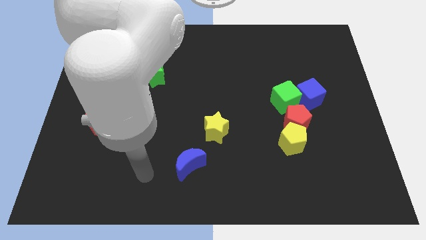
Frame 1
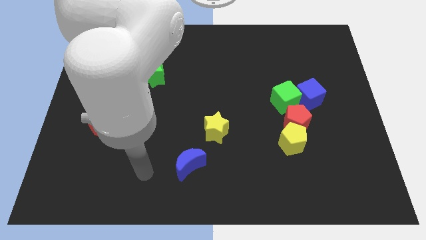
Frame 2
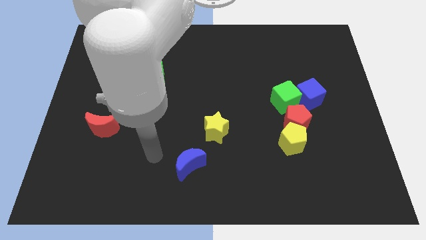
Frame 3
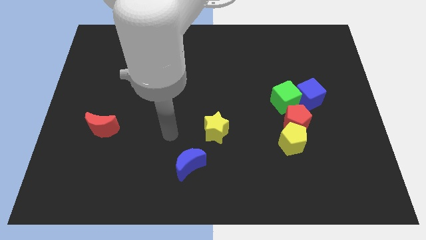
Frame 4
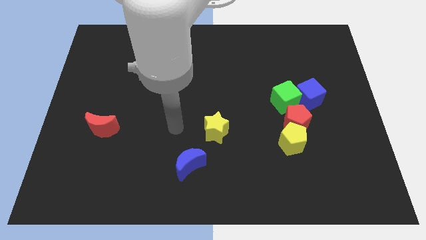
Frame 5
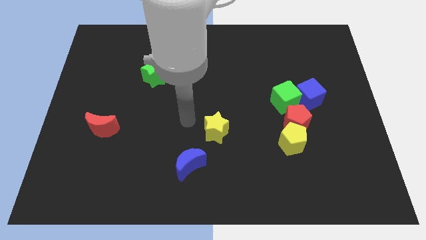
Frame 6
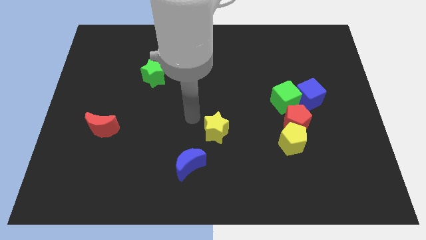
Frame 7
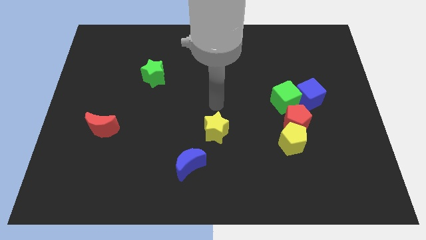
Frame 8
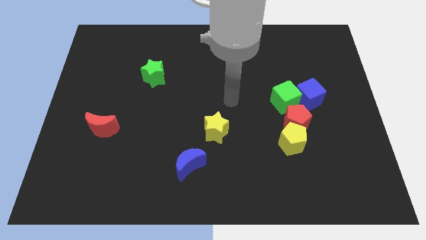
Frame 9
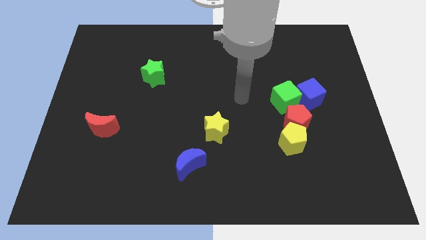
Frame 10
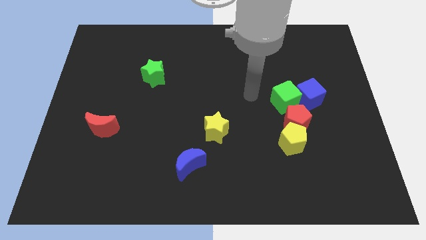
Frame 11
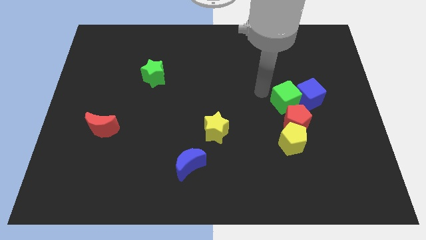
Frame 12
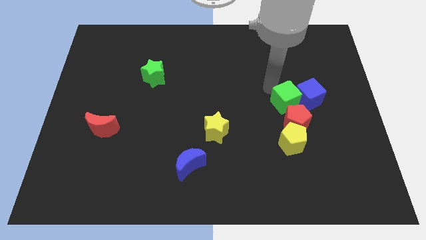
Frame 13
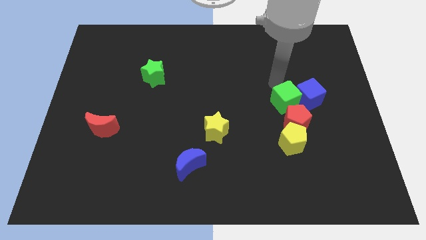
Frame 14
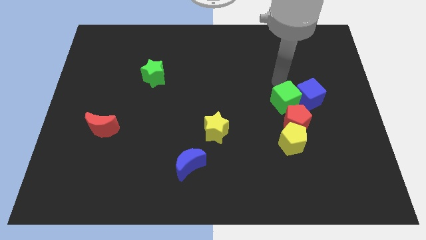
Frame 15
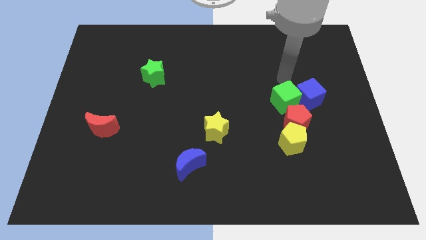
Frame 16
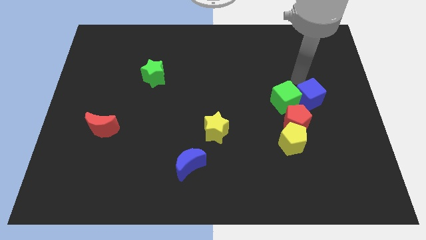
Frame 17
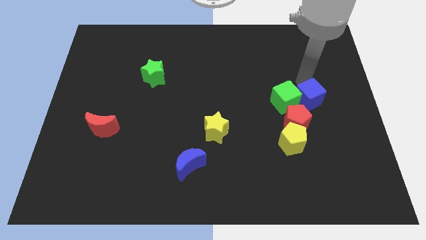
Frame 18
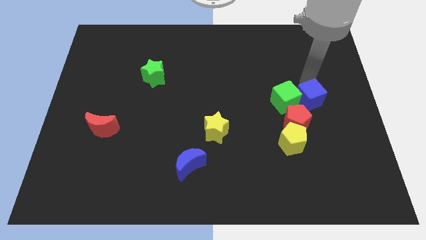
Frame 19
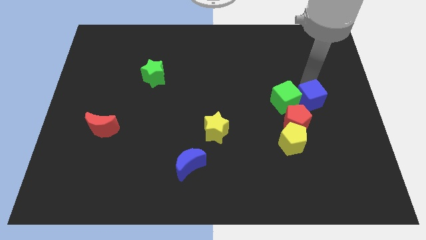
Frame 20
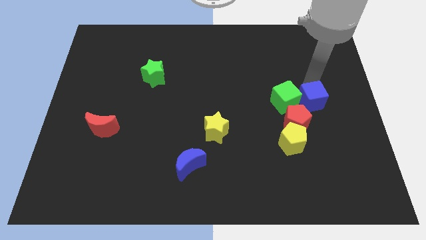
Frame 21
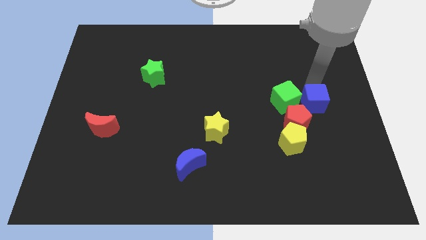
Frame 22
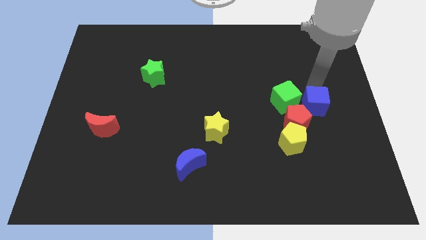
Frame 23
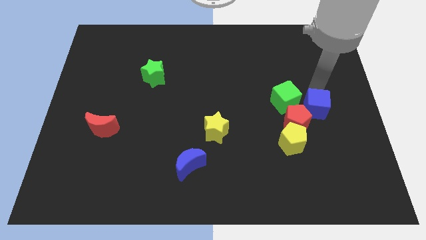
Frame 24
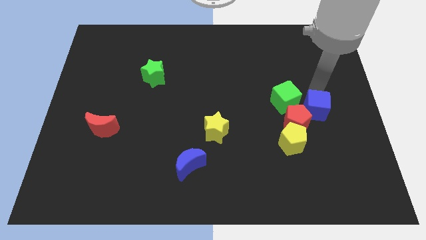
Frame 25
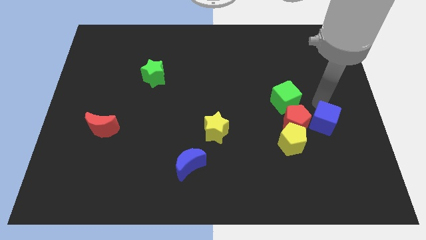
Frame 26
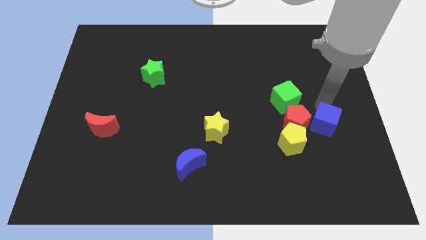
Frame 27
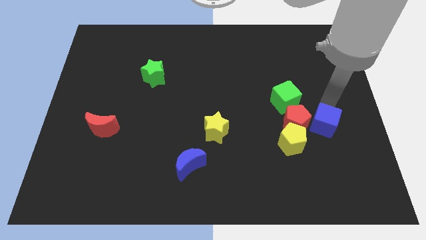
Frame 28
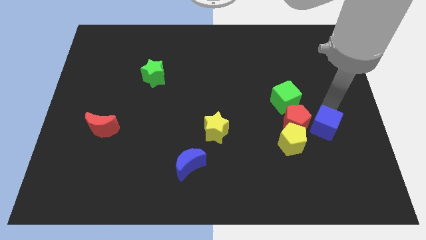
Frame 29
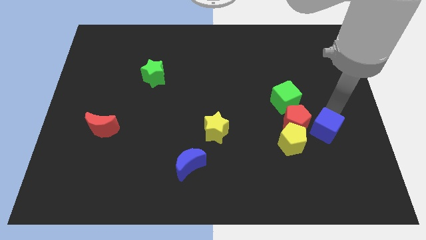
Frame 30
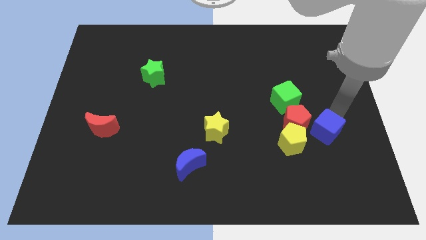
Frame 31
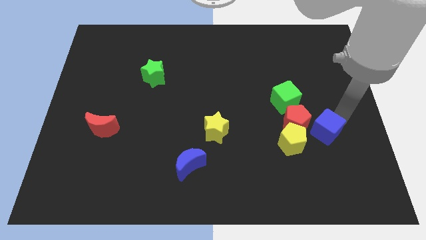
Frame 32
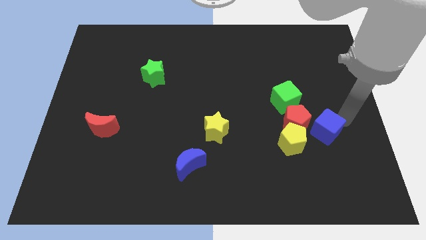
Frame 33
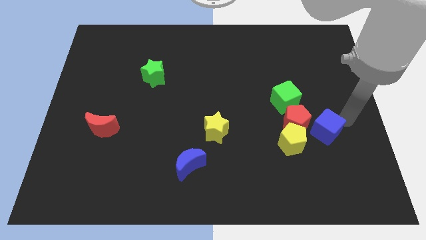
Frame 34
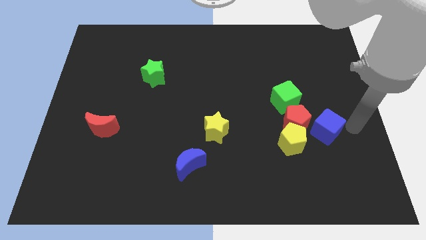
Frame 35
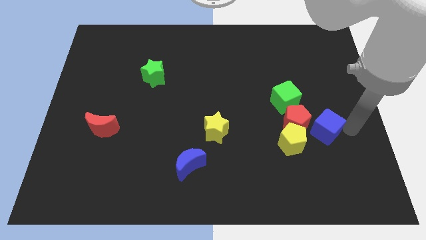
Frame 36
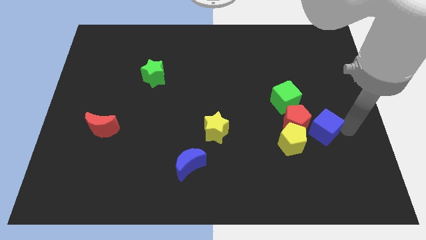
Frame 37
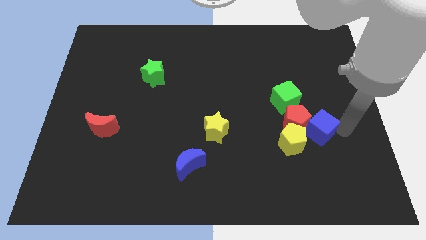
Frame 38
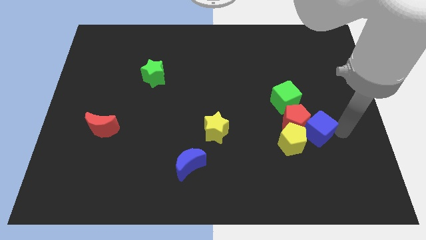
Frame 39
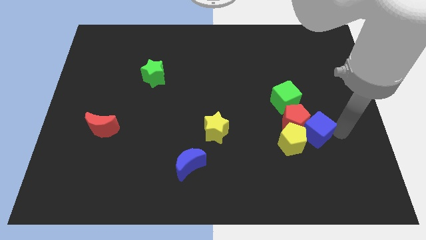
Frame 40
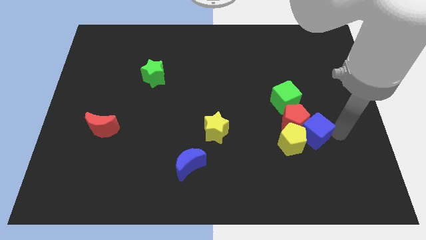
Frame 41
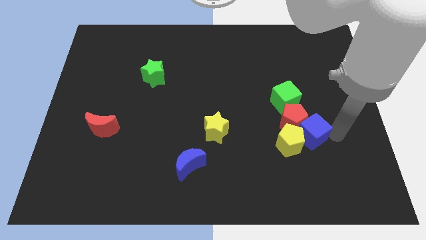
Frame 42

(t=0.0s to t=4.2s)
move the blue cube close to the yellow pentagon

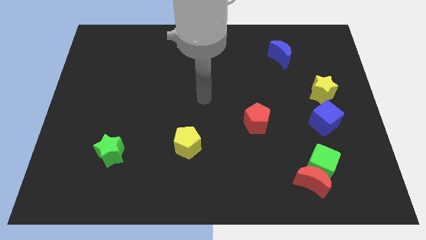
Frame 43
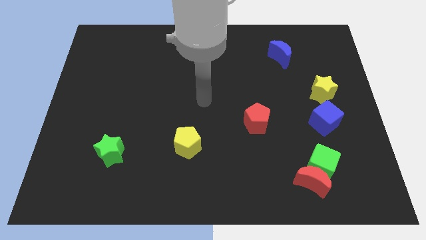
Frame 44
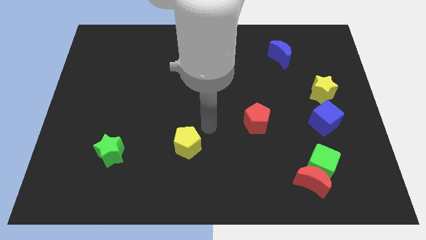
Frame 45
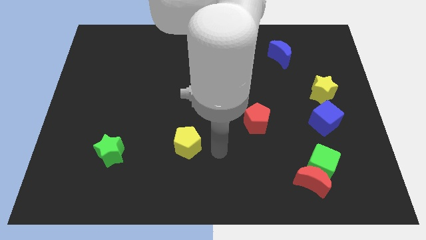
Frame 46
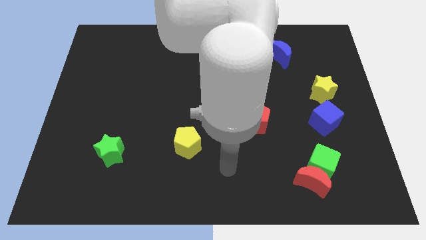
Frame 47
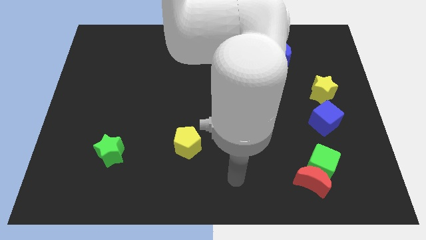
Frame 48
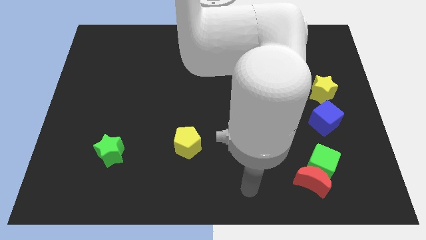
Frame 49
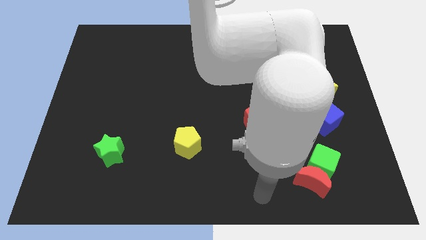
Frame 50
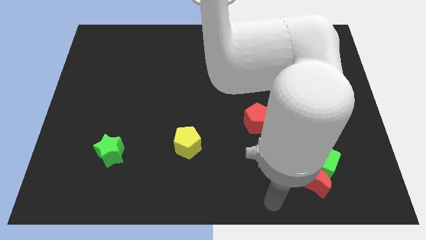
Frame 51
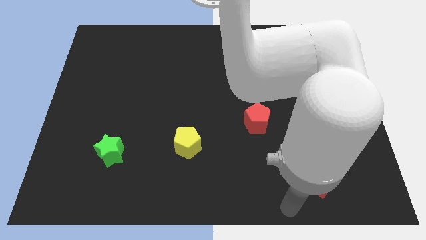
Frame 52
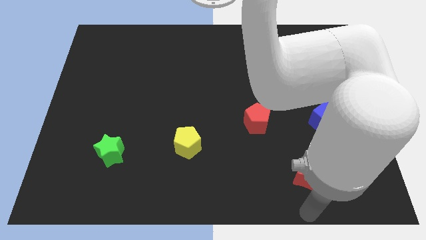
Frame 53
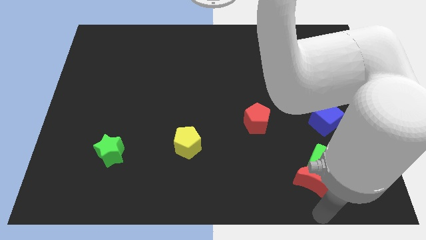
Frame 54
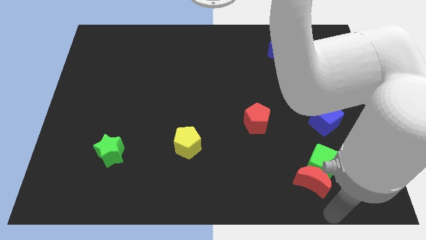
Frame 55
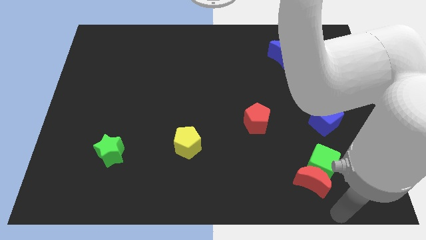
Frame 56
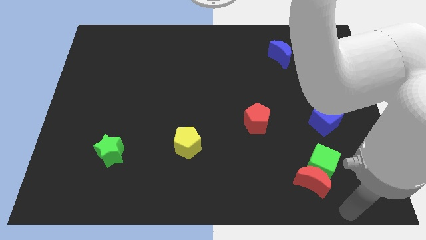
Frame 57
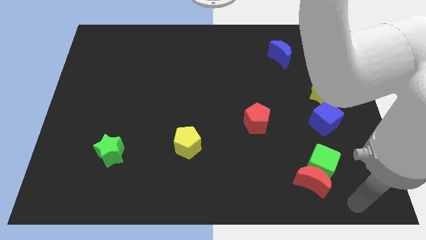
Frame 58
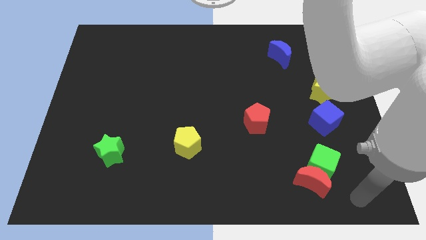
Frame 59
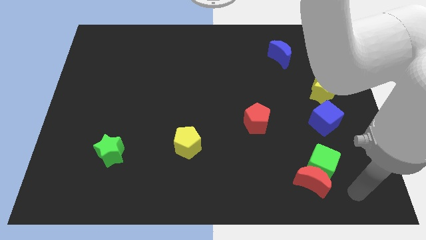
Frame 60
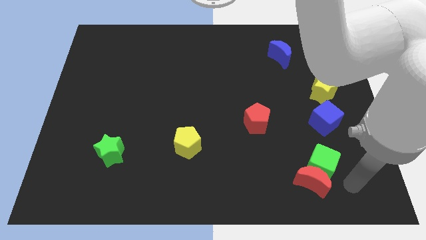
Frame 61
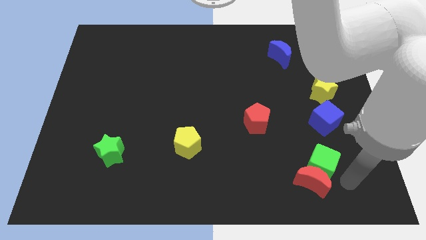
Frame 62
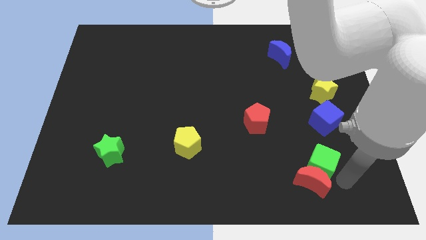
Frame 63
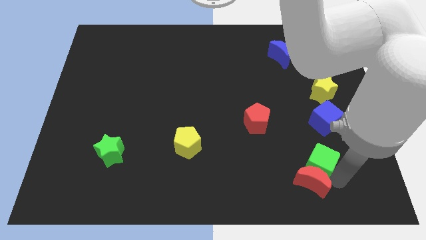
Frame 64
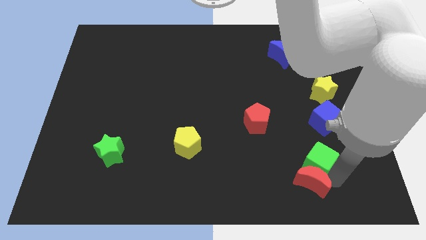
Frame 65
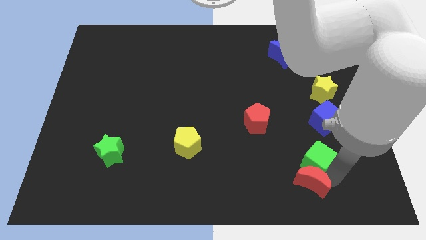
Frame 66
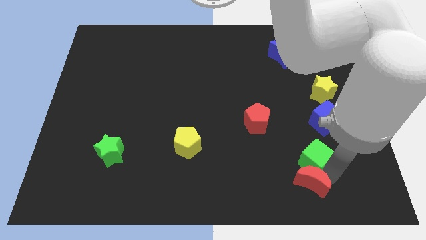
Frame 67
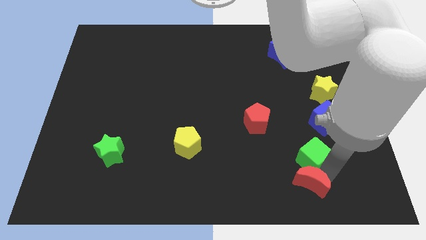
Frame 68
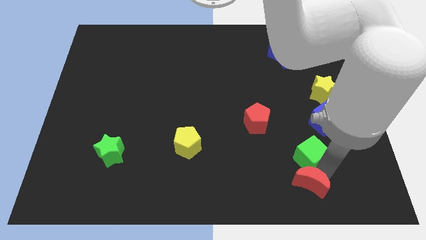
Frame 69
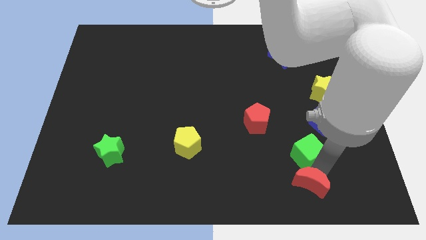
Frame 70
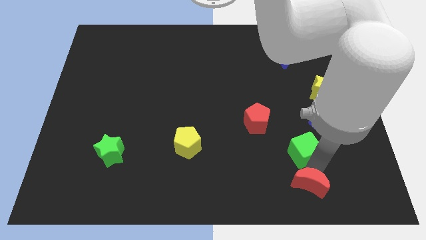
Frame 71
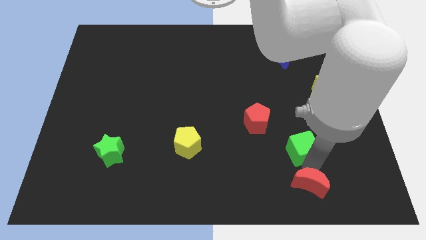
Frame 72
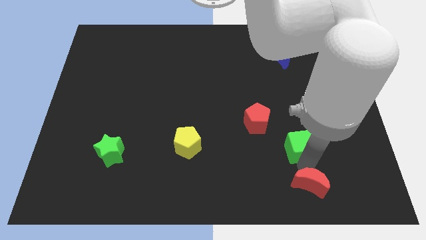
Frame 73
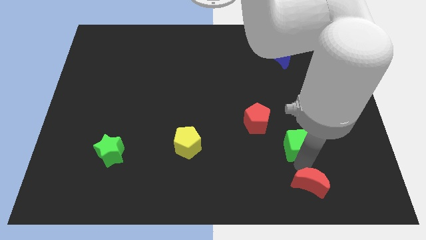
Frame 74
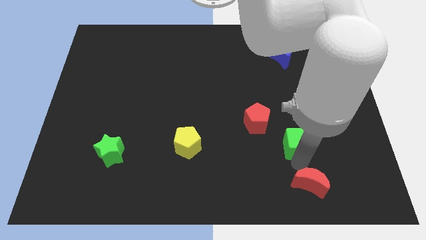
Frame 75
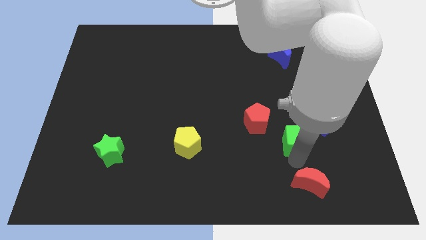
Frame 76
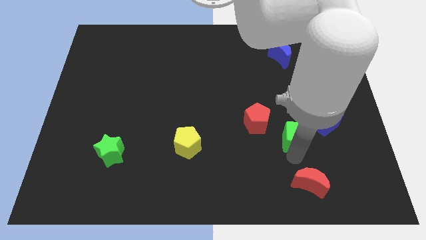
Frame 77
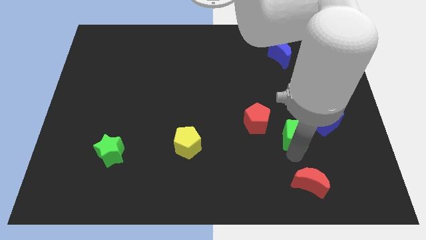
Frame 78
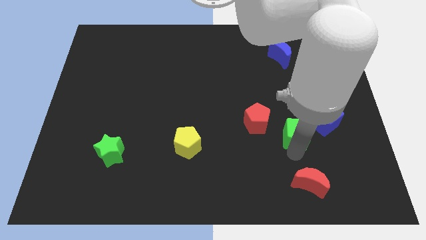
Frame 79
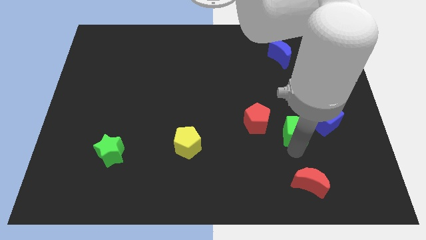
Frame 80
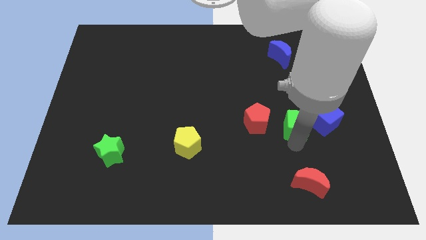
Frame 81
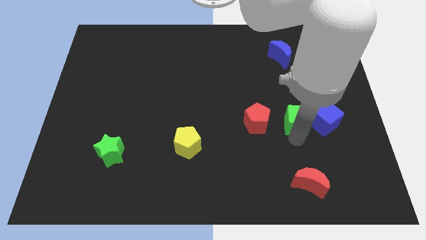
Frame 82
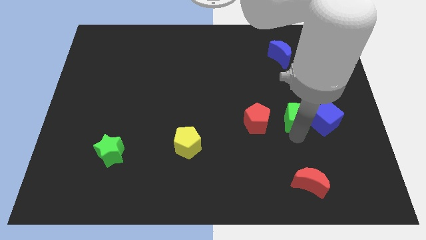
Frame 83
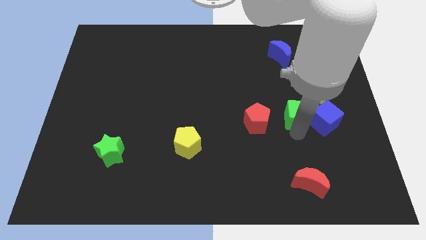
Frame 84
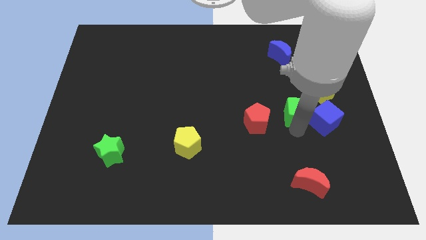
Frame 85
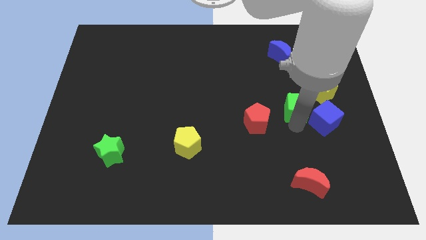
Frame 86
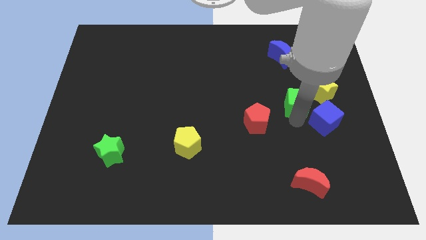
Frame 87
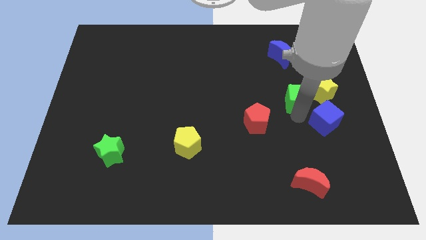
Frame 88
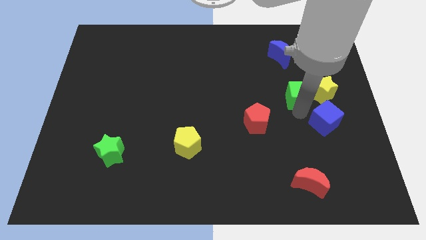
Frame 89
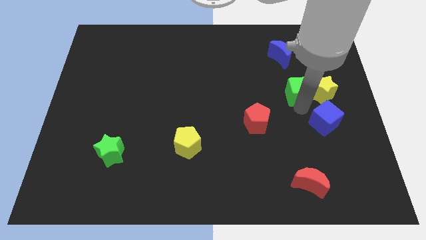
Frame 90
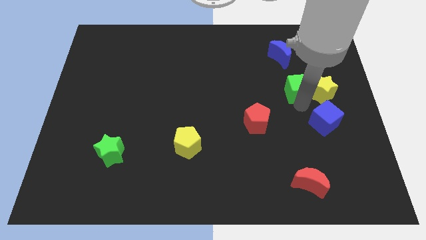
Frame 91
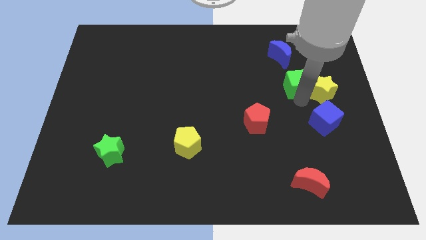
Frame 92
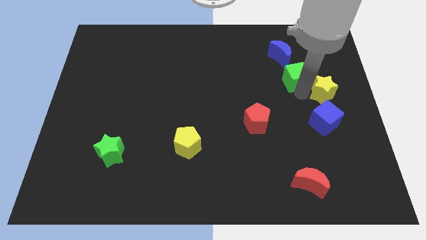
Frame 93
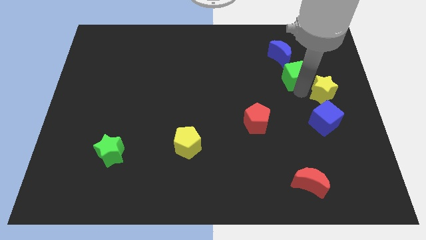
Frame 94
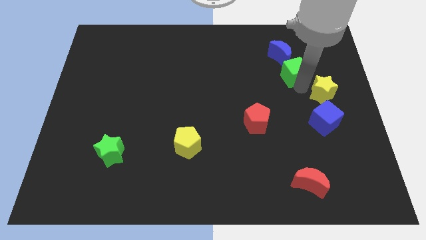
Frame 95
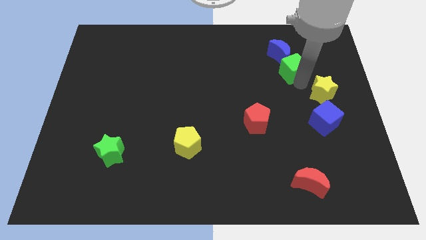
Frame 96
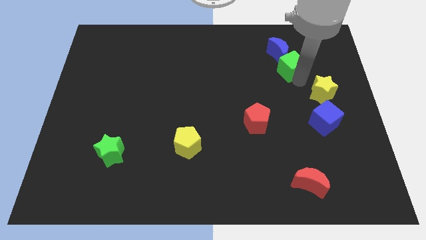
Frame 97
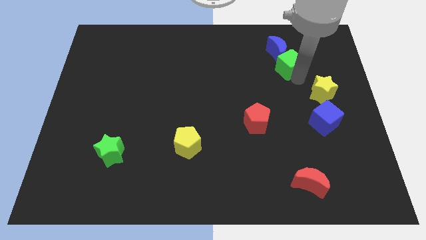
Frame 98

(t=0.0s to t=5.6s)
put the green cube to the blue moon
